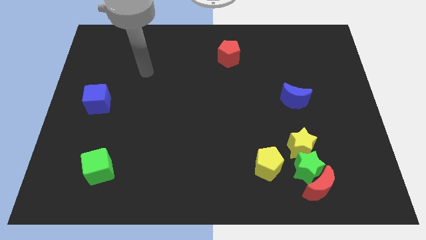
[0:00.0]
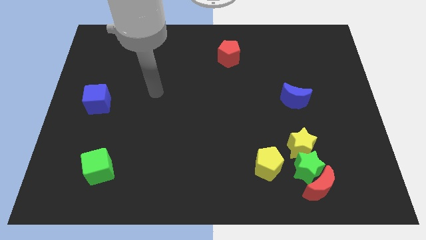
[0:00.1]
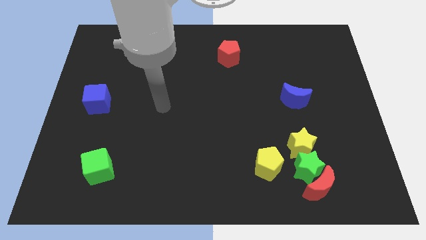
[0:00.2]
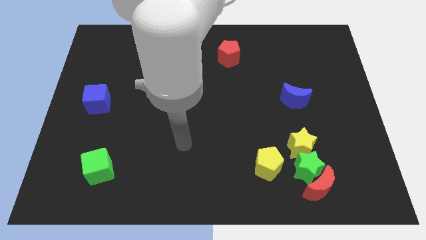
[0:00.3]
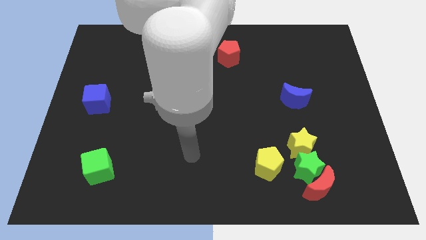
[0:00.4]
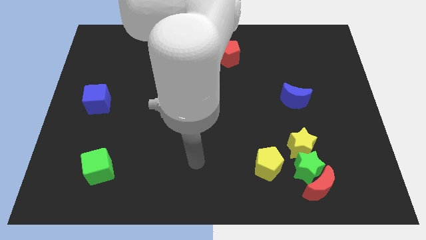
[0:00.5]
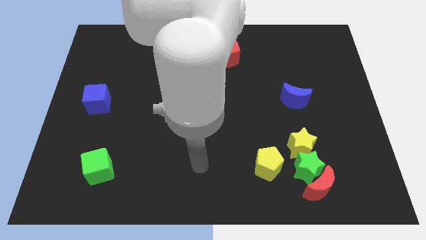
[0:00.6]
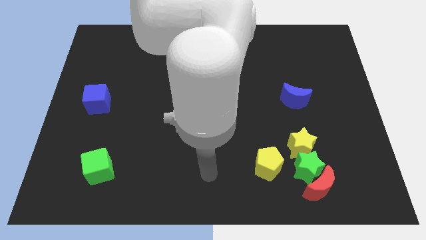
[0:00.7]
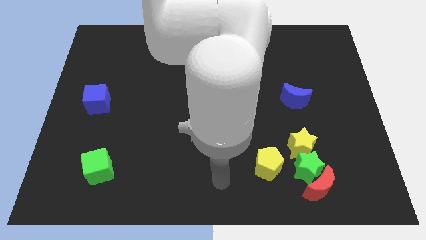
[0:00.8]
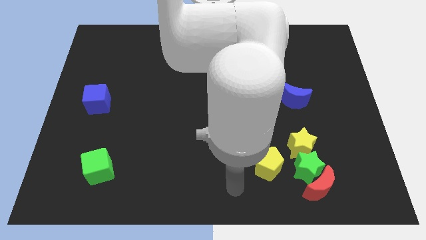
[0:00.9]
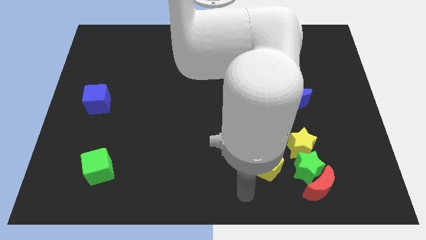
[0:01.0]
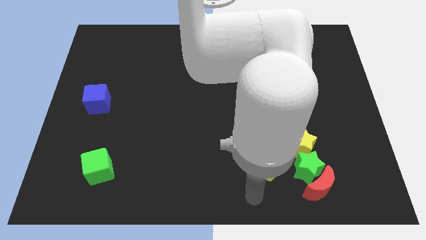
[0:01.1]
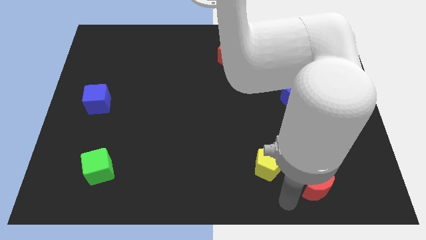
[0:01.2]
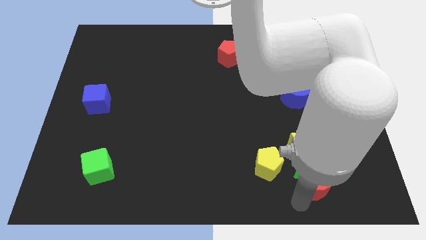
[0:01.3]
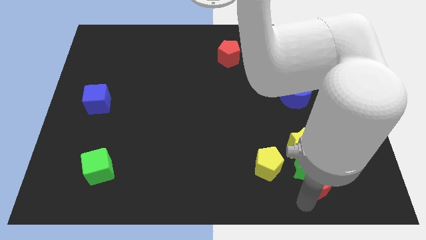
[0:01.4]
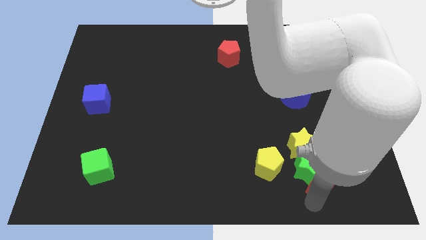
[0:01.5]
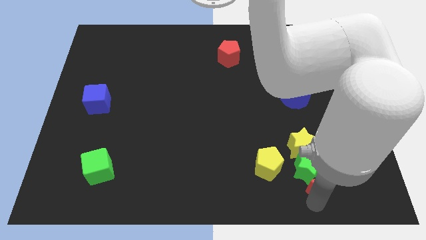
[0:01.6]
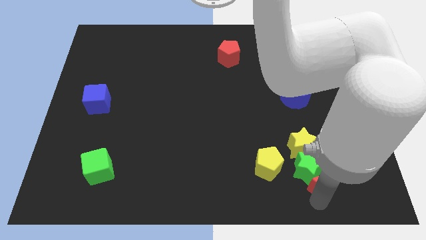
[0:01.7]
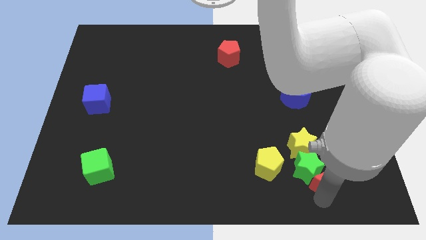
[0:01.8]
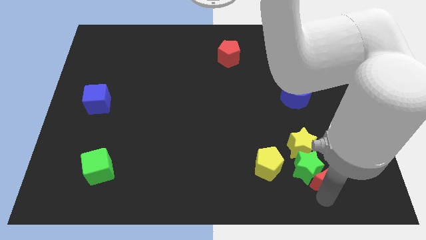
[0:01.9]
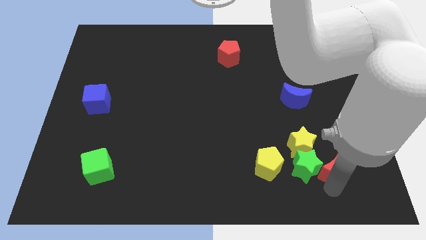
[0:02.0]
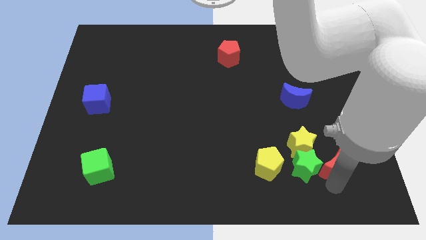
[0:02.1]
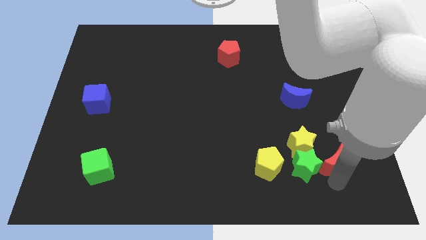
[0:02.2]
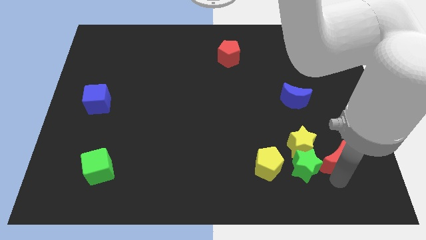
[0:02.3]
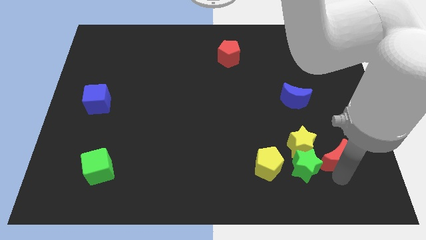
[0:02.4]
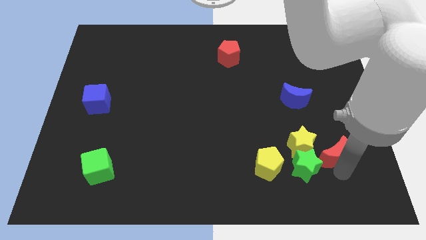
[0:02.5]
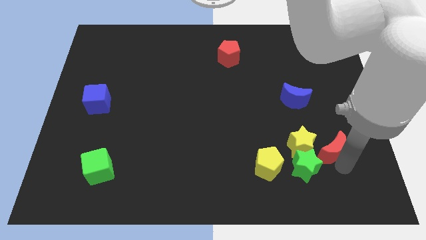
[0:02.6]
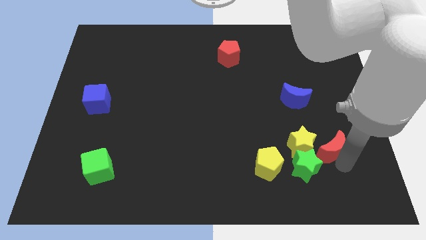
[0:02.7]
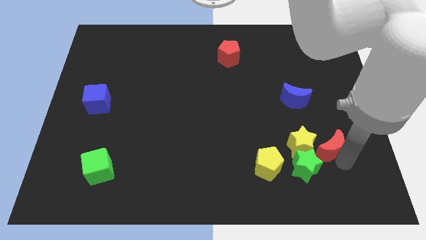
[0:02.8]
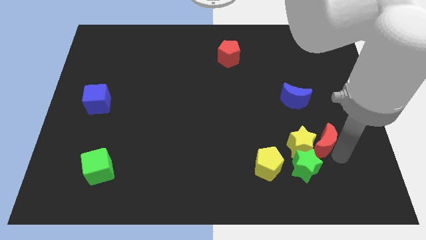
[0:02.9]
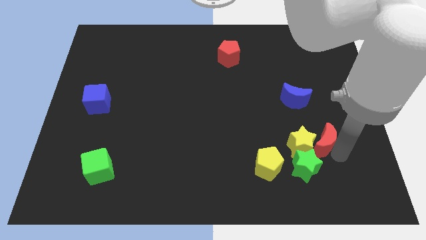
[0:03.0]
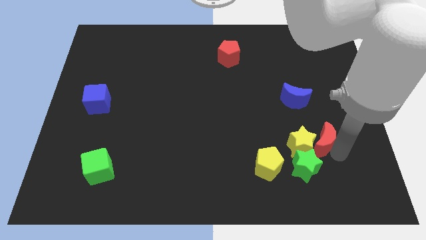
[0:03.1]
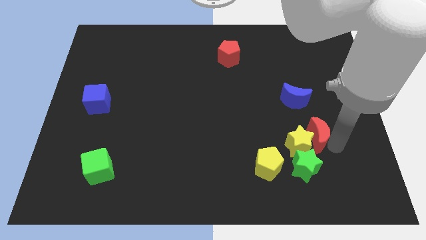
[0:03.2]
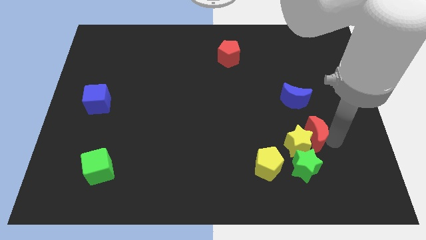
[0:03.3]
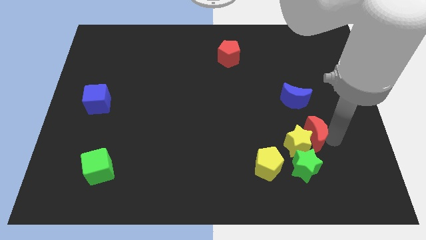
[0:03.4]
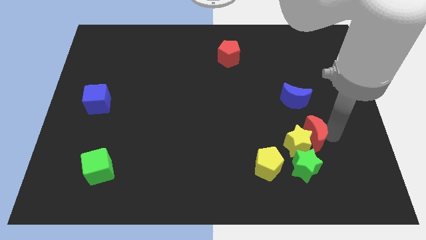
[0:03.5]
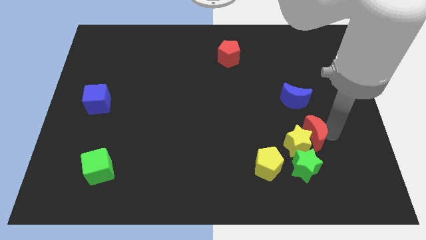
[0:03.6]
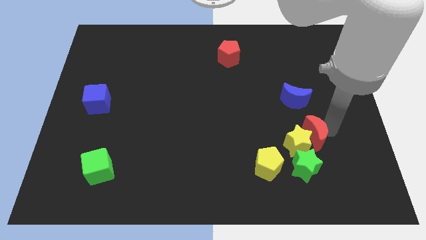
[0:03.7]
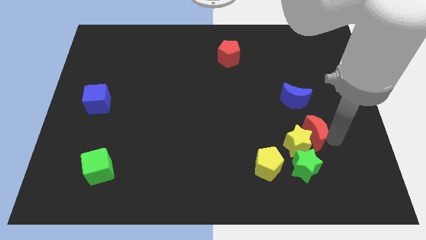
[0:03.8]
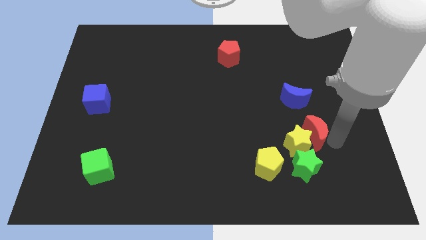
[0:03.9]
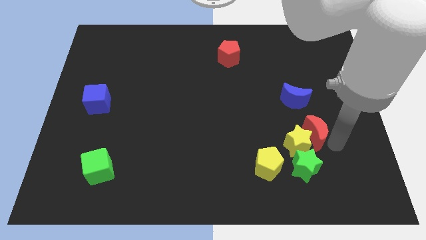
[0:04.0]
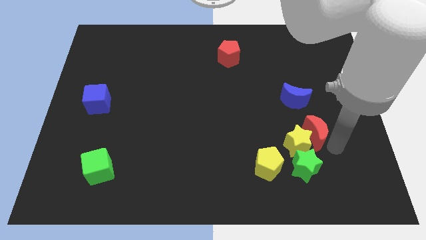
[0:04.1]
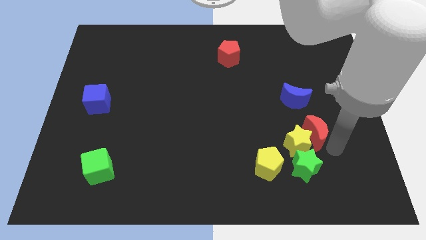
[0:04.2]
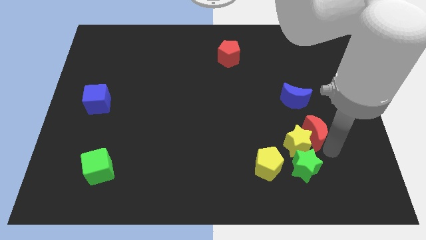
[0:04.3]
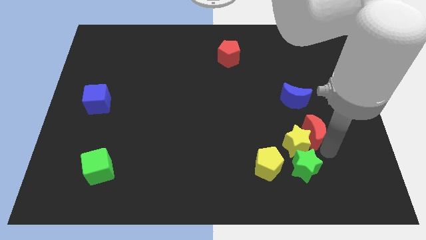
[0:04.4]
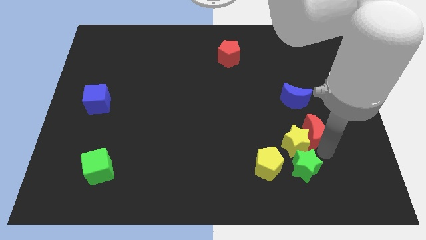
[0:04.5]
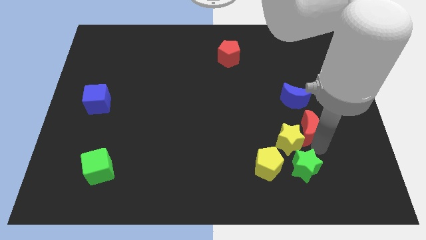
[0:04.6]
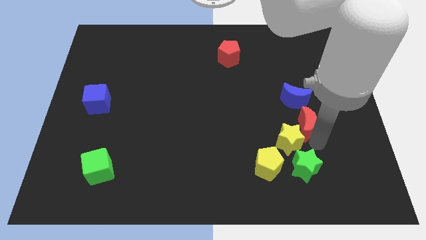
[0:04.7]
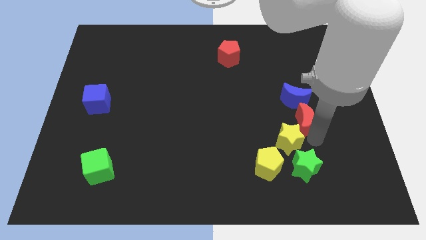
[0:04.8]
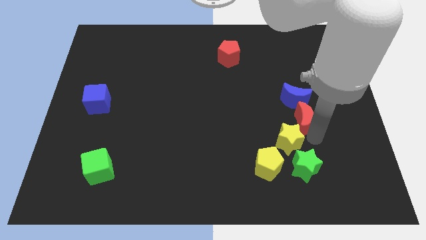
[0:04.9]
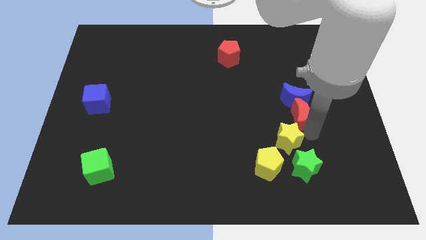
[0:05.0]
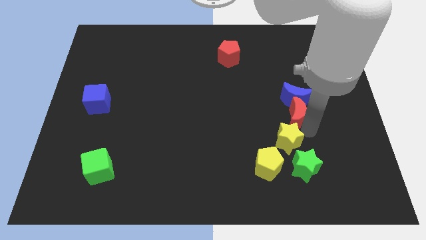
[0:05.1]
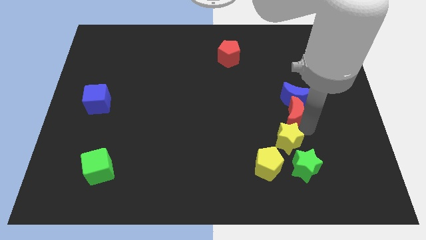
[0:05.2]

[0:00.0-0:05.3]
slide the red moon close to the blue moon

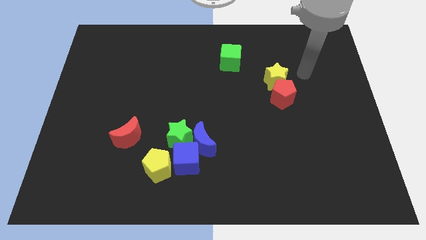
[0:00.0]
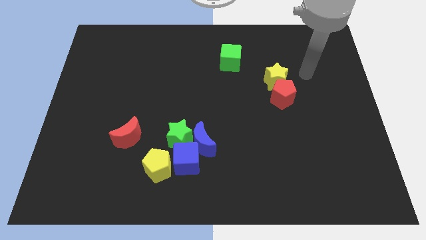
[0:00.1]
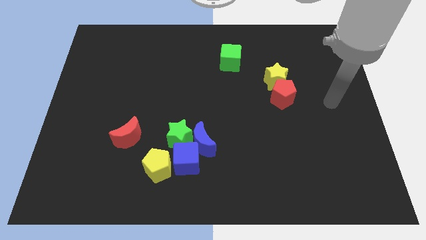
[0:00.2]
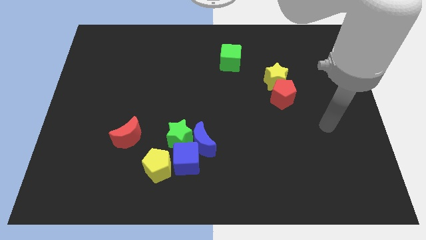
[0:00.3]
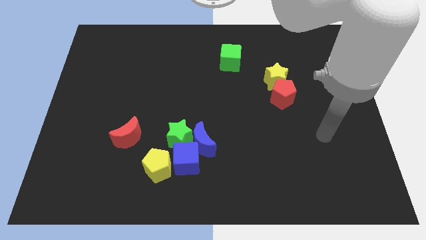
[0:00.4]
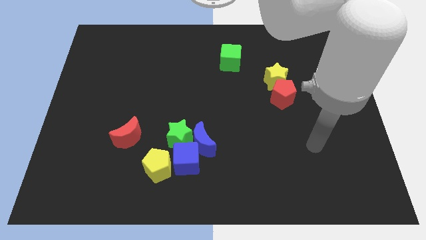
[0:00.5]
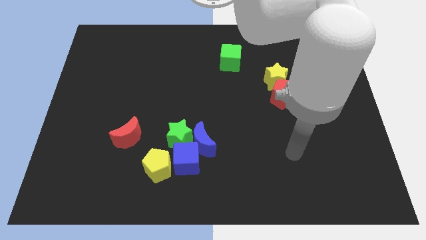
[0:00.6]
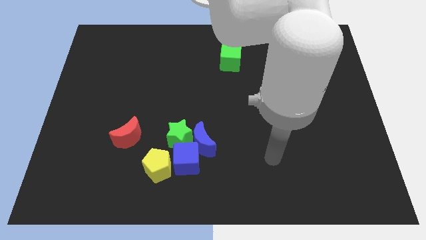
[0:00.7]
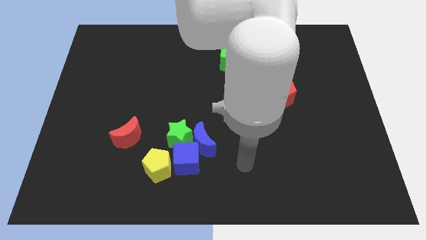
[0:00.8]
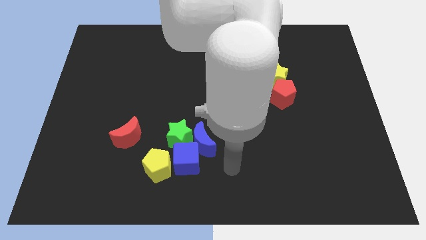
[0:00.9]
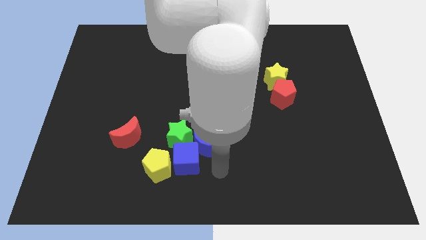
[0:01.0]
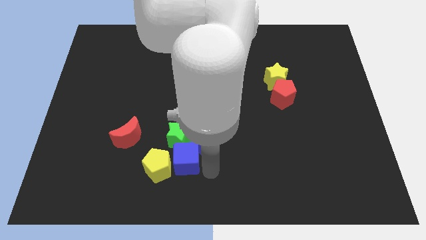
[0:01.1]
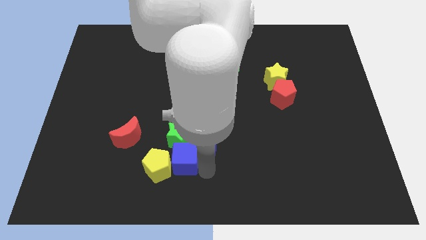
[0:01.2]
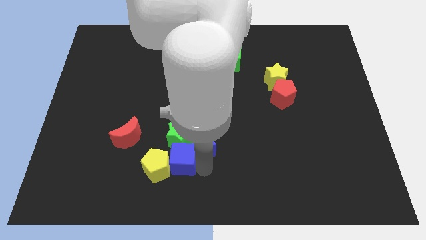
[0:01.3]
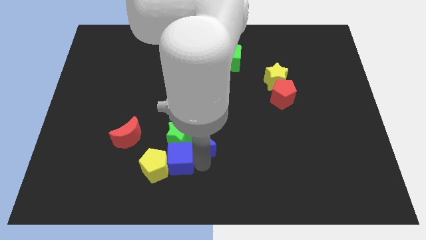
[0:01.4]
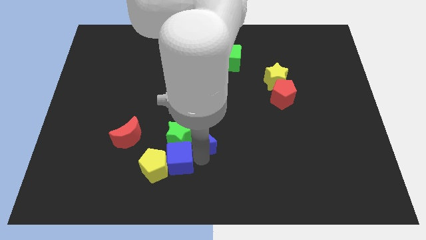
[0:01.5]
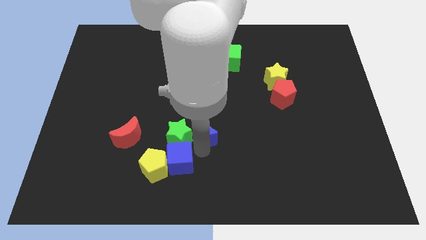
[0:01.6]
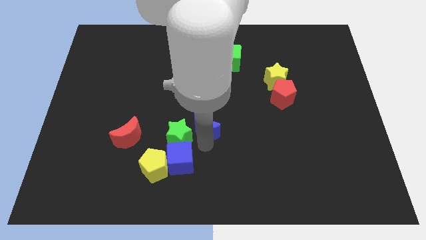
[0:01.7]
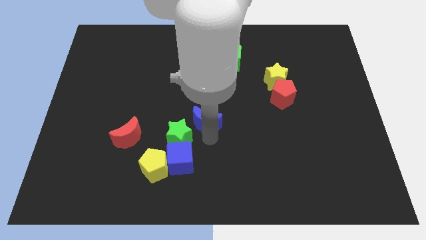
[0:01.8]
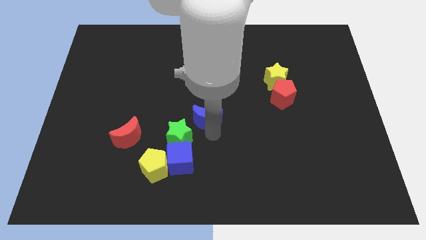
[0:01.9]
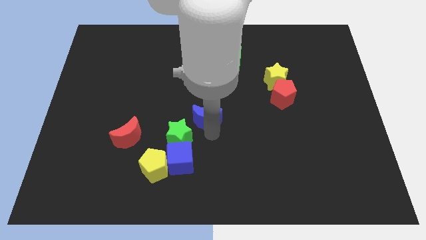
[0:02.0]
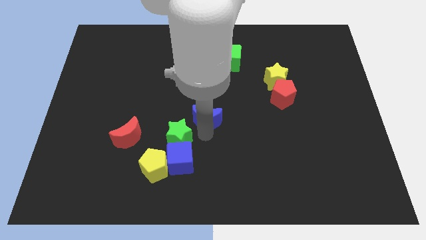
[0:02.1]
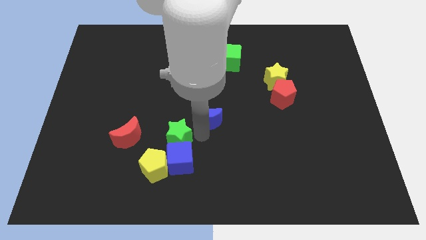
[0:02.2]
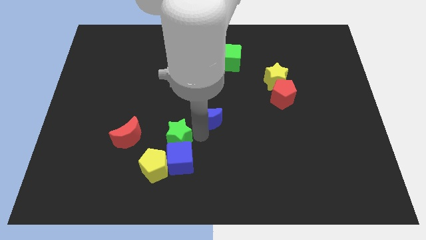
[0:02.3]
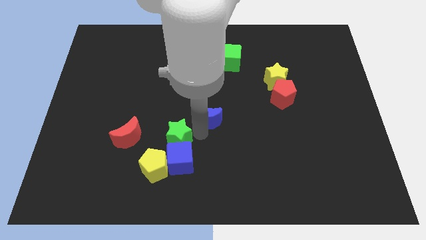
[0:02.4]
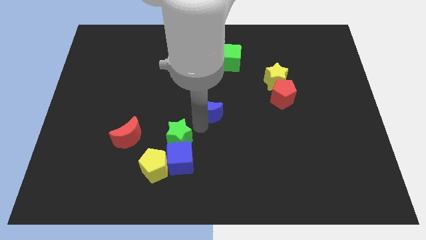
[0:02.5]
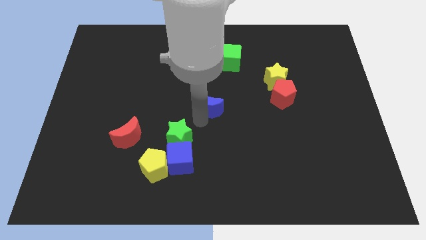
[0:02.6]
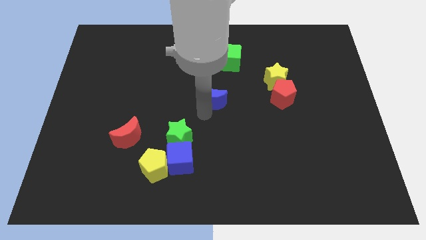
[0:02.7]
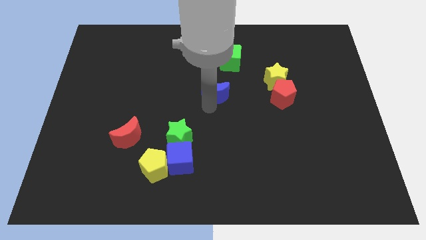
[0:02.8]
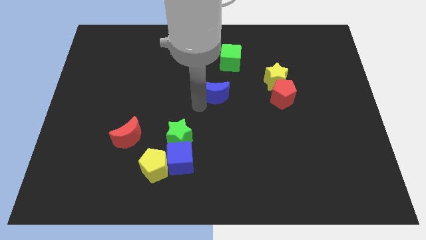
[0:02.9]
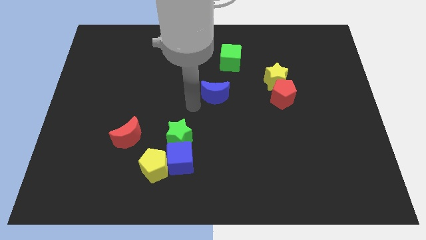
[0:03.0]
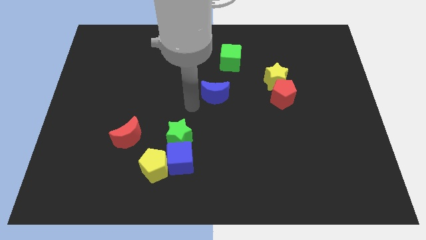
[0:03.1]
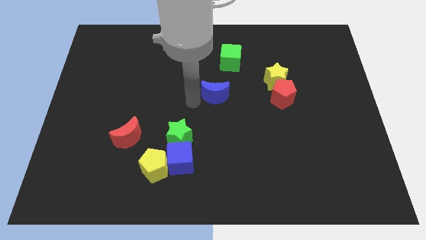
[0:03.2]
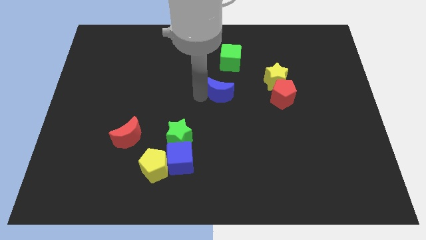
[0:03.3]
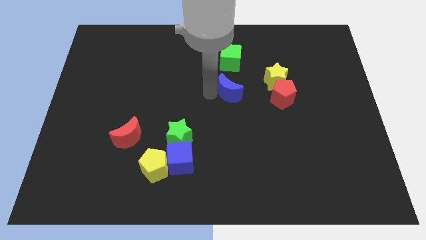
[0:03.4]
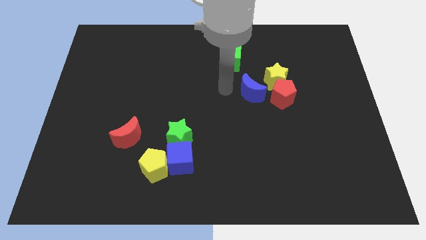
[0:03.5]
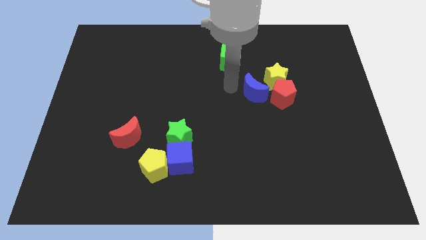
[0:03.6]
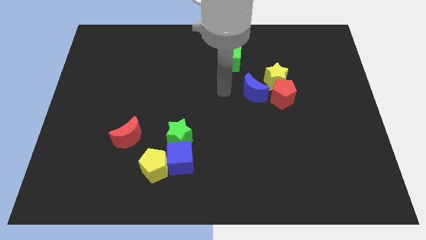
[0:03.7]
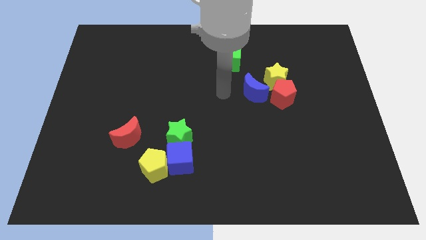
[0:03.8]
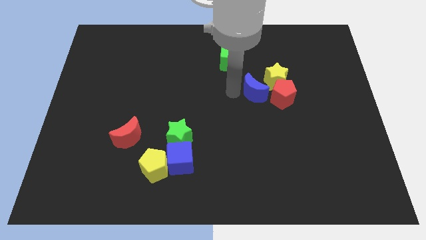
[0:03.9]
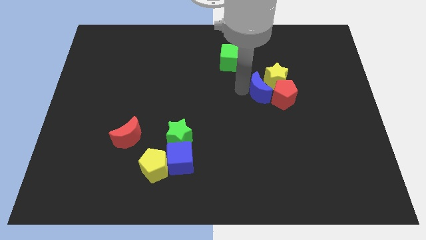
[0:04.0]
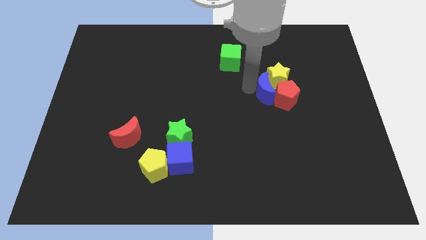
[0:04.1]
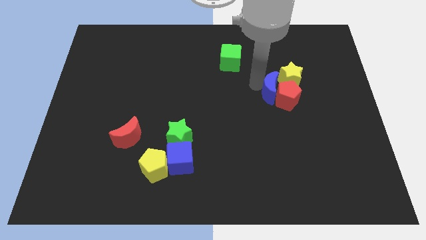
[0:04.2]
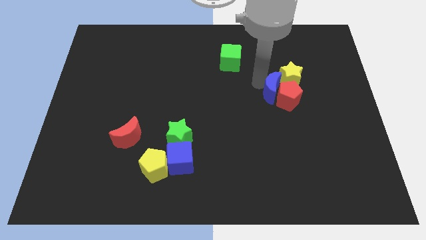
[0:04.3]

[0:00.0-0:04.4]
move the blue moon towards the yellow star
